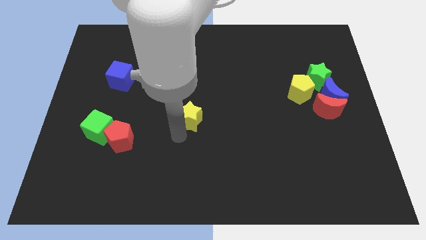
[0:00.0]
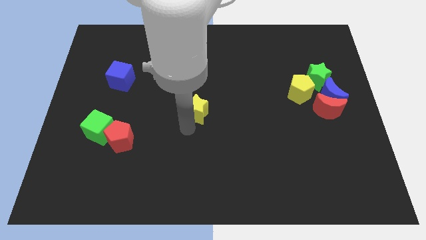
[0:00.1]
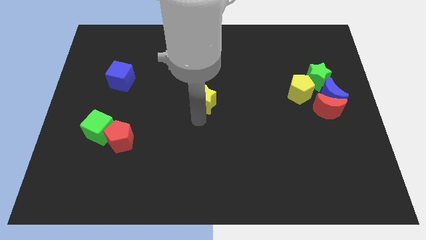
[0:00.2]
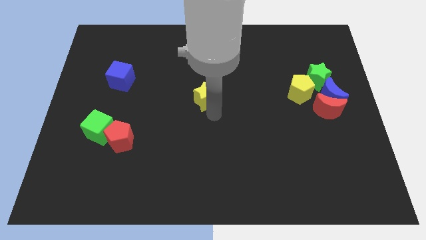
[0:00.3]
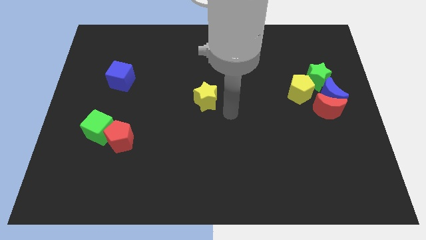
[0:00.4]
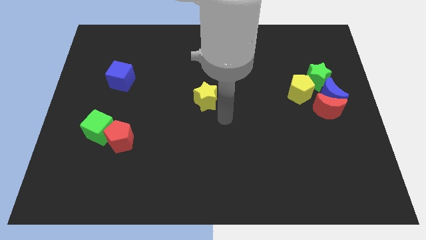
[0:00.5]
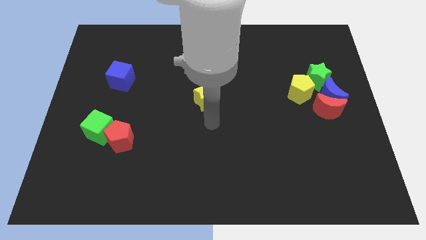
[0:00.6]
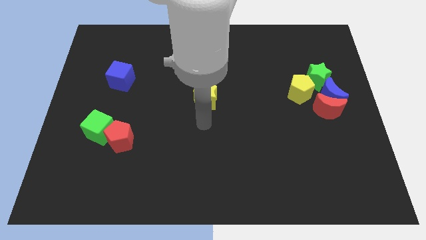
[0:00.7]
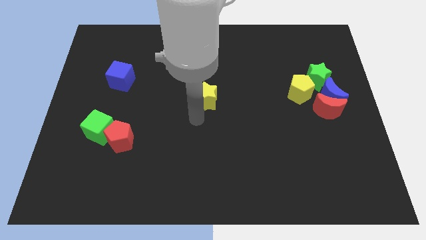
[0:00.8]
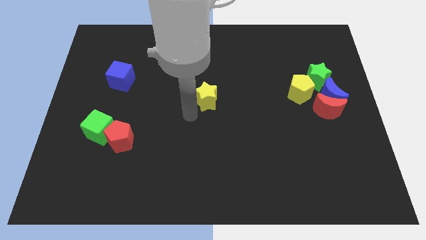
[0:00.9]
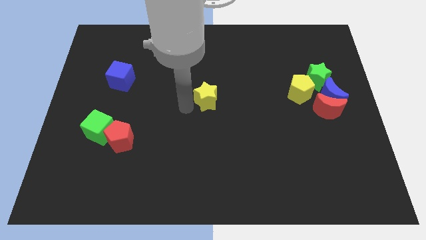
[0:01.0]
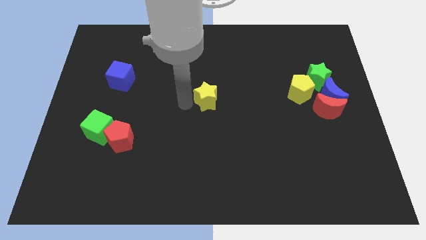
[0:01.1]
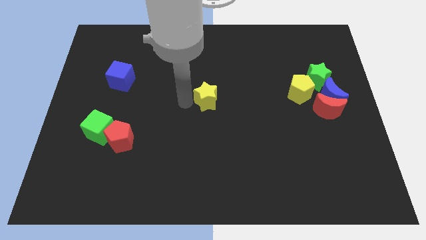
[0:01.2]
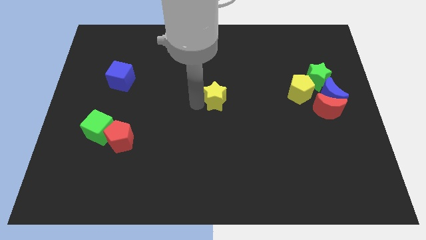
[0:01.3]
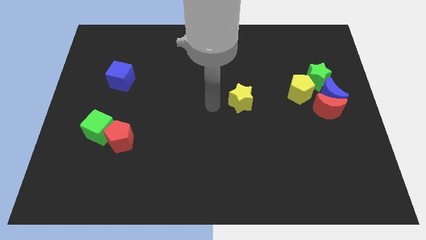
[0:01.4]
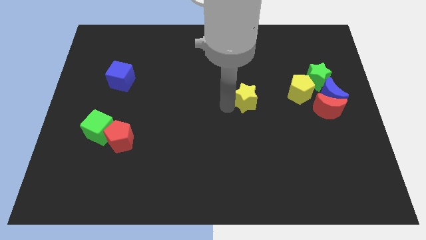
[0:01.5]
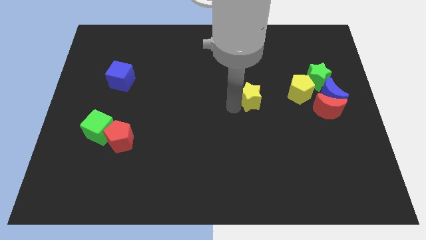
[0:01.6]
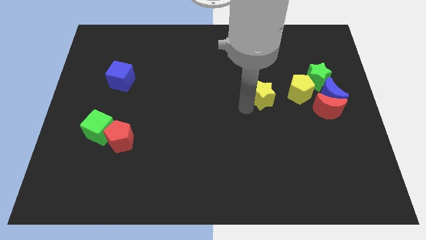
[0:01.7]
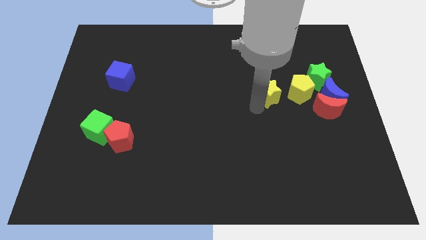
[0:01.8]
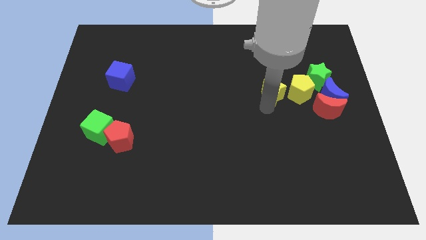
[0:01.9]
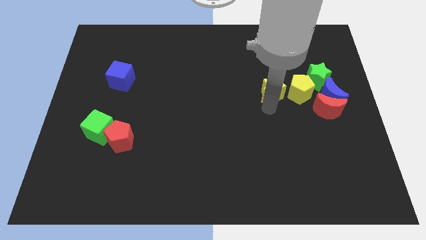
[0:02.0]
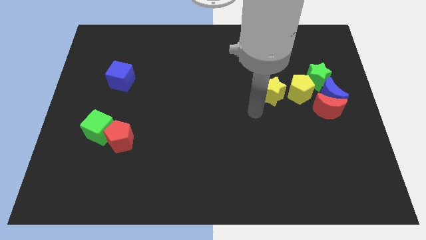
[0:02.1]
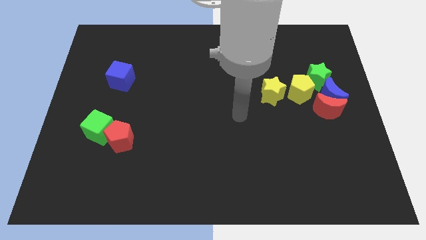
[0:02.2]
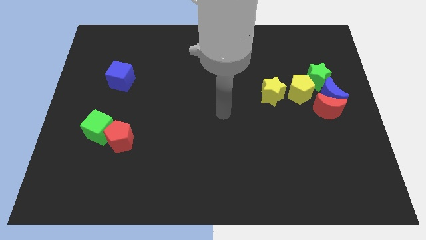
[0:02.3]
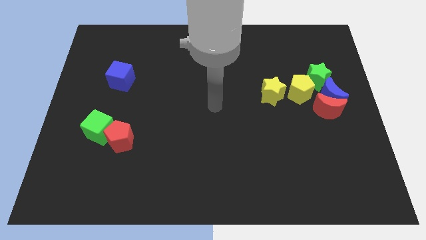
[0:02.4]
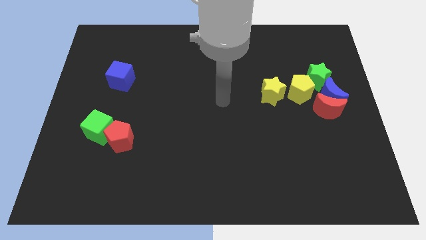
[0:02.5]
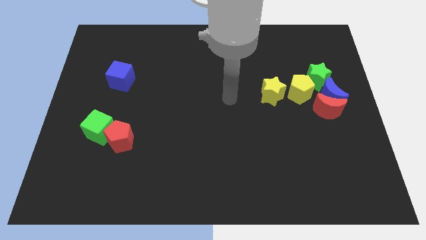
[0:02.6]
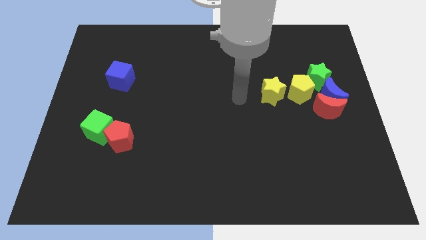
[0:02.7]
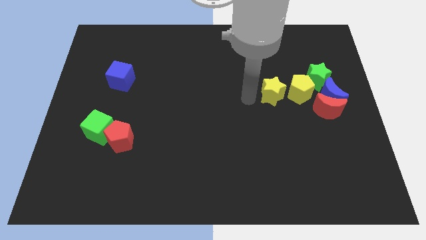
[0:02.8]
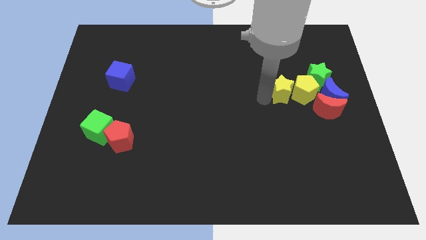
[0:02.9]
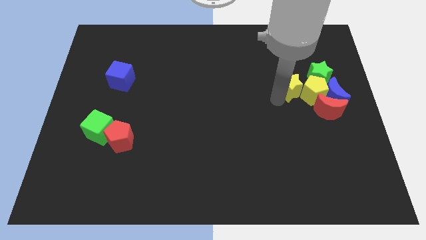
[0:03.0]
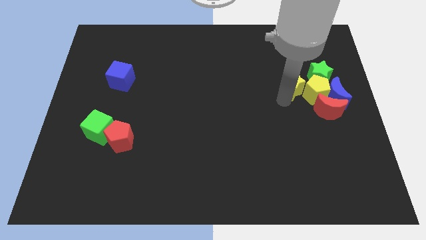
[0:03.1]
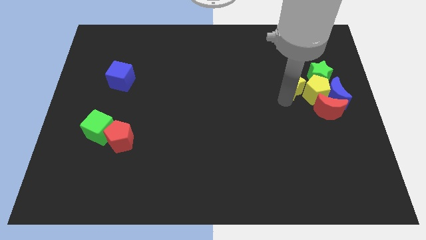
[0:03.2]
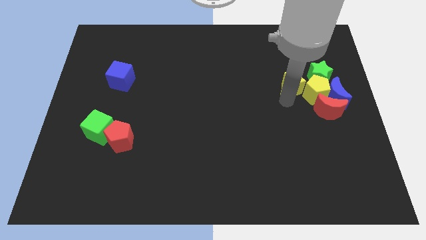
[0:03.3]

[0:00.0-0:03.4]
move the yellow star into the group of blocks

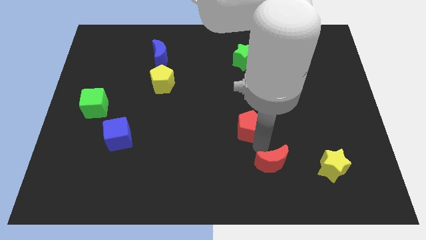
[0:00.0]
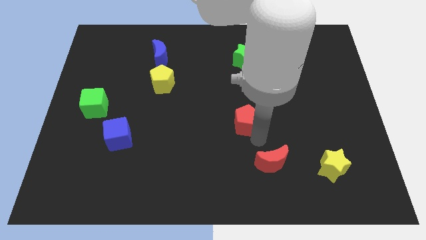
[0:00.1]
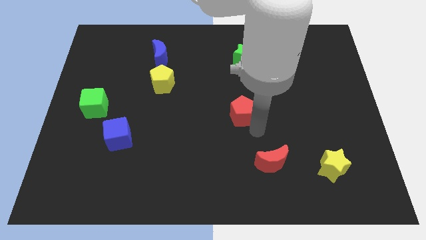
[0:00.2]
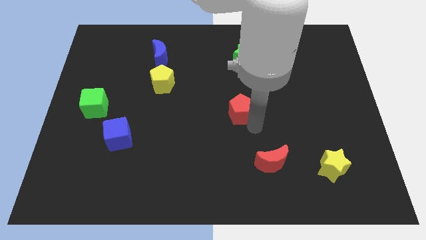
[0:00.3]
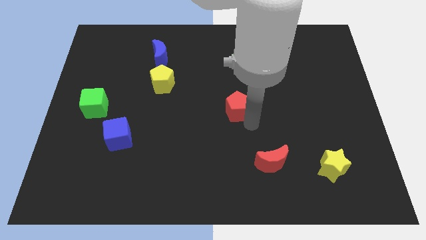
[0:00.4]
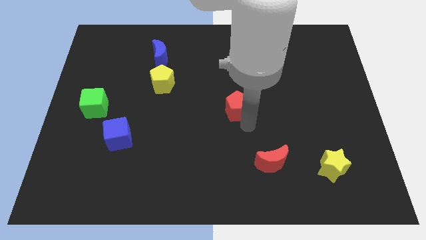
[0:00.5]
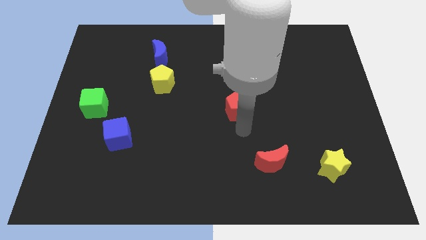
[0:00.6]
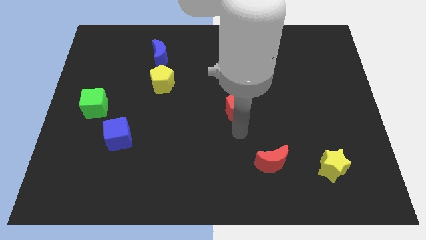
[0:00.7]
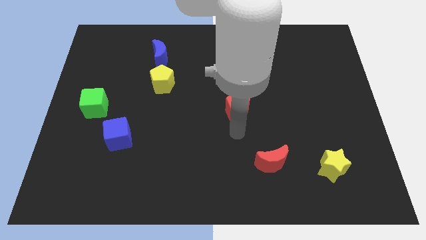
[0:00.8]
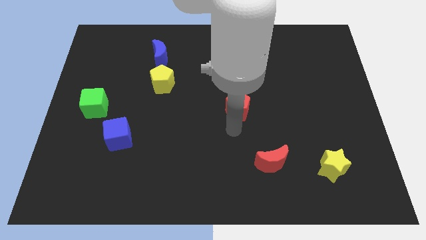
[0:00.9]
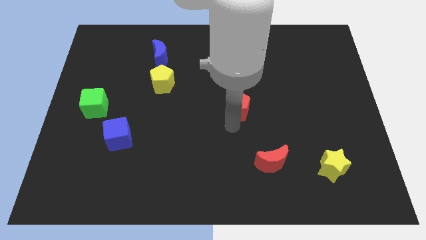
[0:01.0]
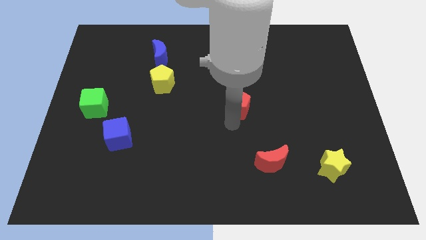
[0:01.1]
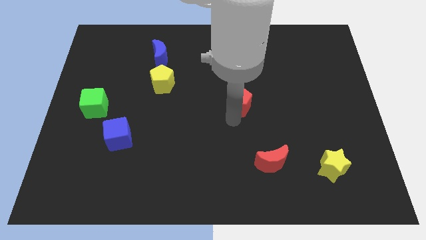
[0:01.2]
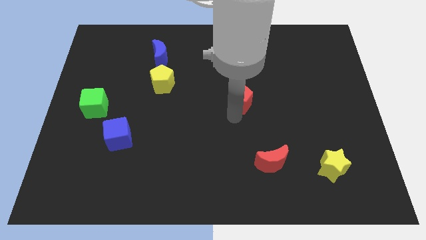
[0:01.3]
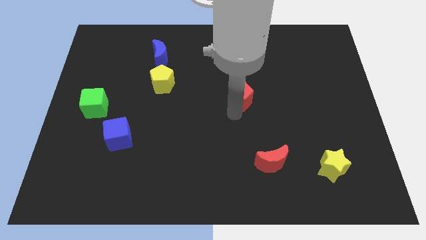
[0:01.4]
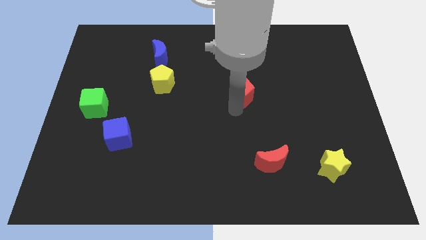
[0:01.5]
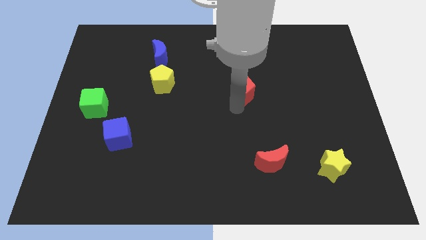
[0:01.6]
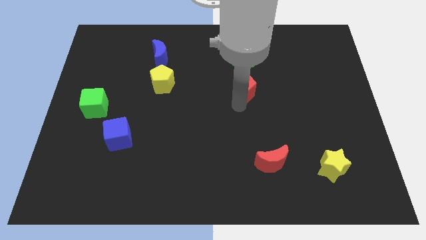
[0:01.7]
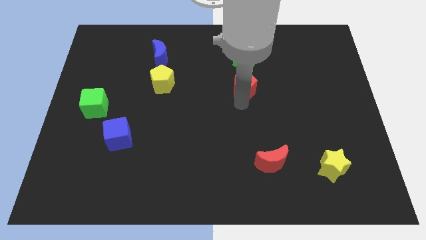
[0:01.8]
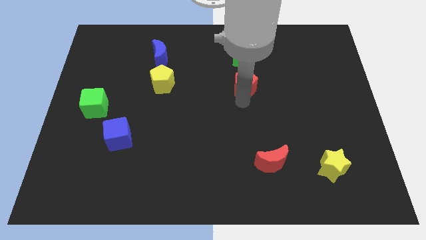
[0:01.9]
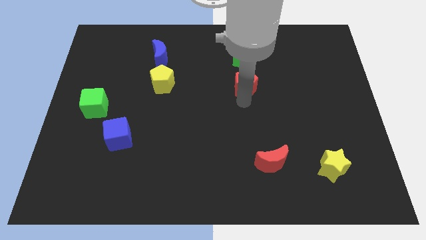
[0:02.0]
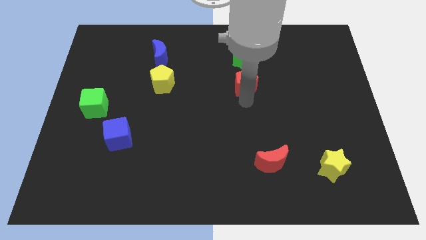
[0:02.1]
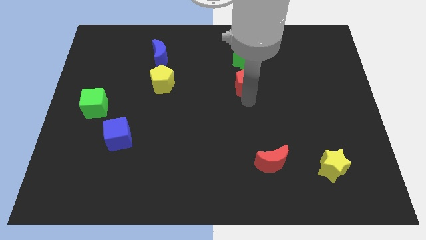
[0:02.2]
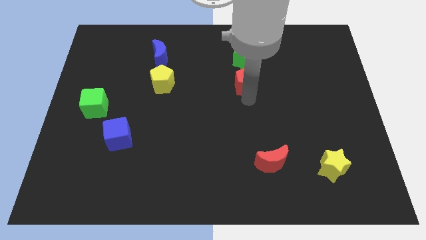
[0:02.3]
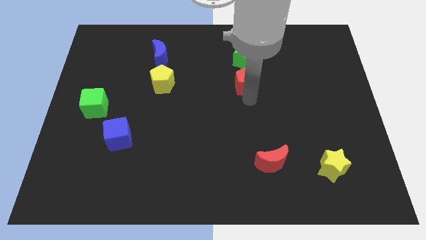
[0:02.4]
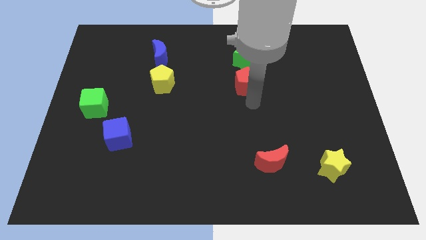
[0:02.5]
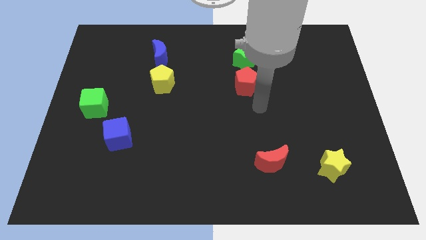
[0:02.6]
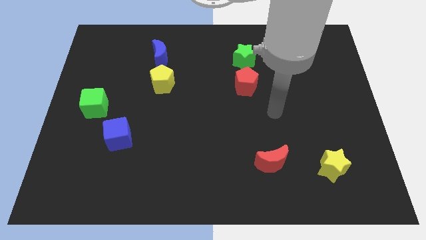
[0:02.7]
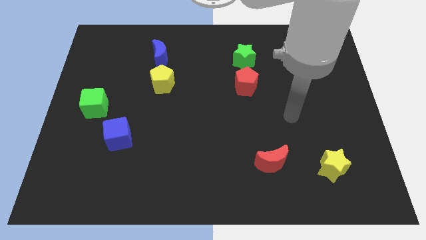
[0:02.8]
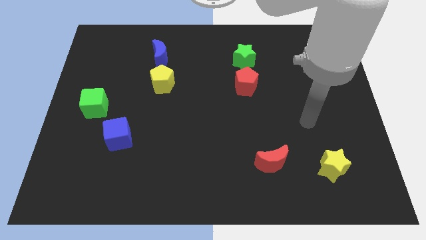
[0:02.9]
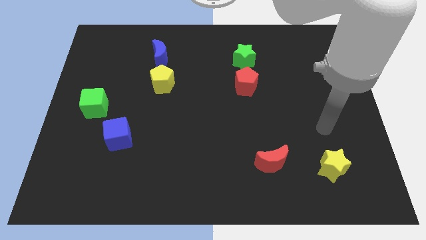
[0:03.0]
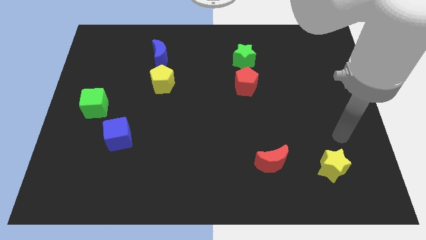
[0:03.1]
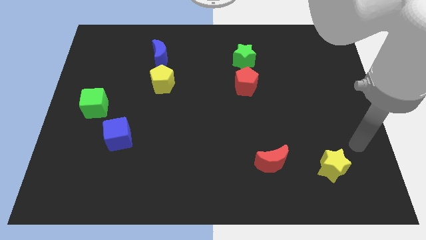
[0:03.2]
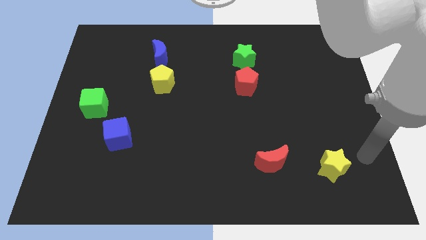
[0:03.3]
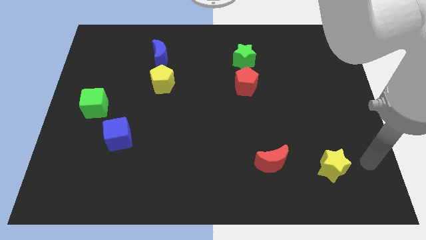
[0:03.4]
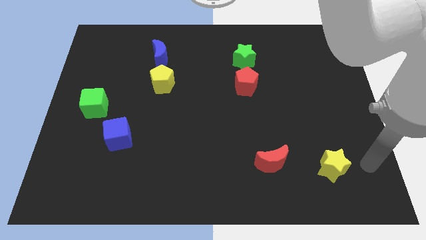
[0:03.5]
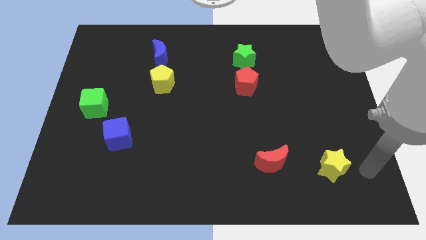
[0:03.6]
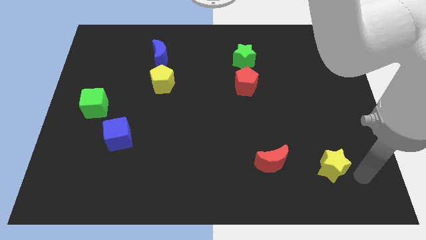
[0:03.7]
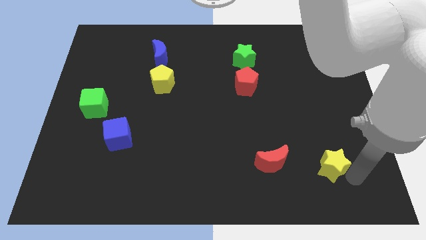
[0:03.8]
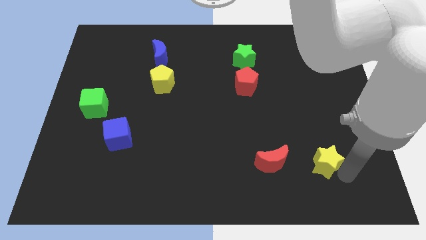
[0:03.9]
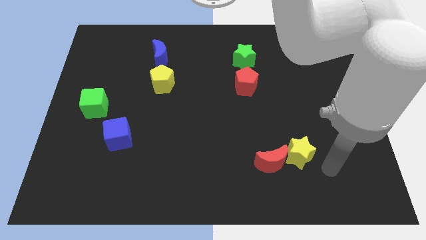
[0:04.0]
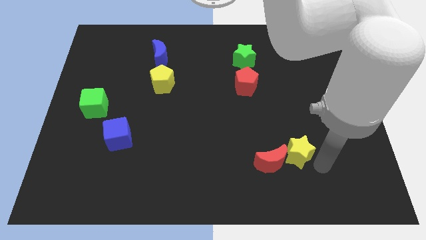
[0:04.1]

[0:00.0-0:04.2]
move yellow star close to red moon

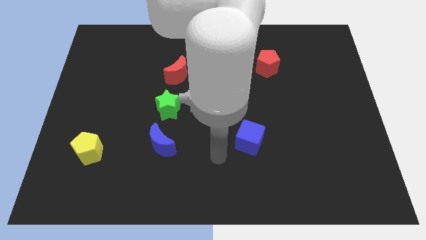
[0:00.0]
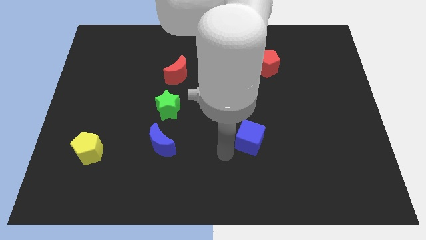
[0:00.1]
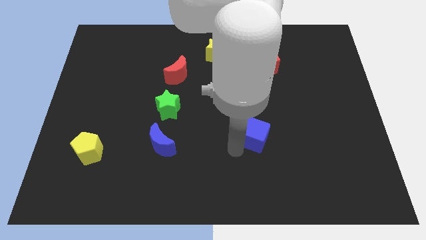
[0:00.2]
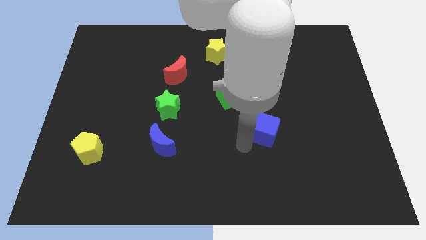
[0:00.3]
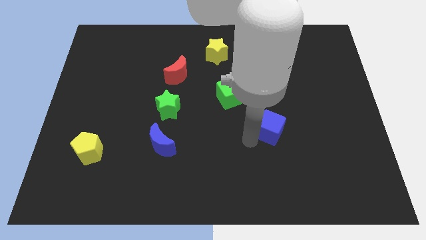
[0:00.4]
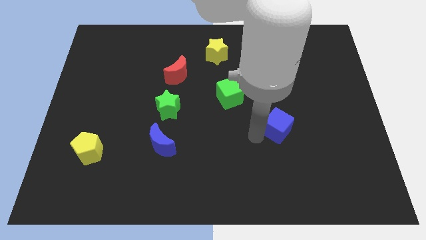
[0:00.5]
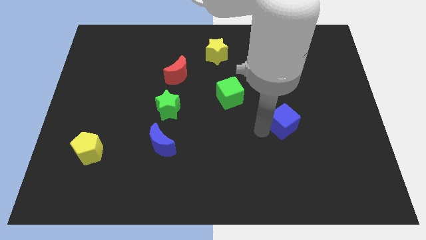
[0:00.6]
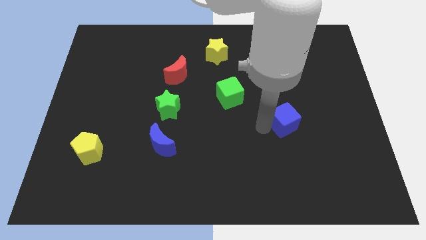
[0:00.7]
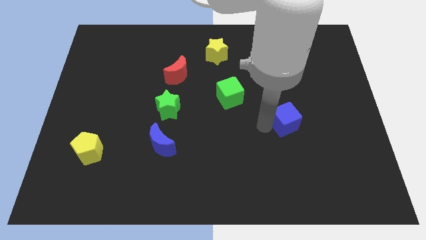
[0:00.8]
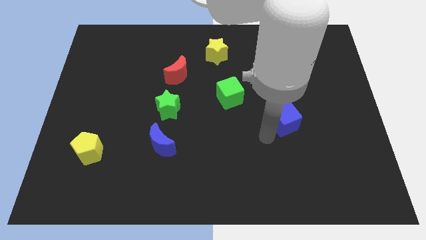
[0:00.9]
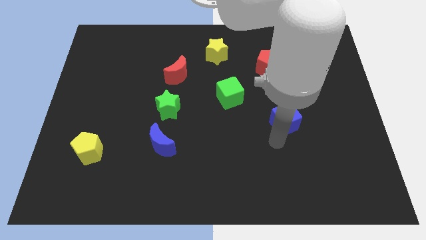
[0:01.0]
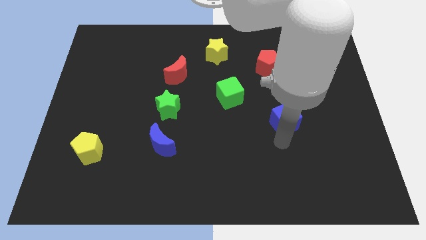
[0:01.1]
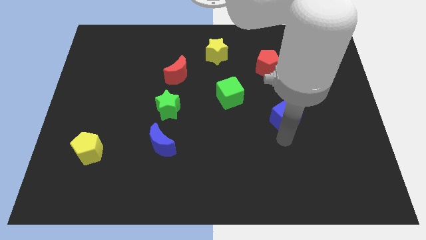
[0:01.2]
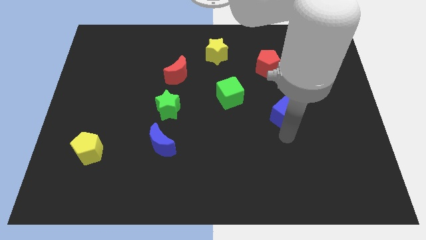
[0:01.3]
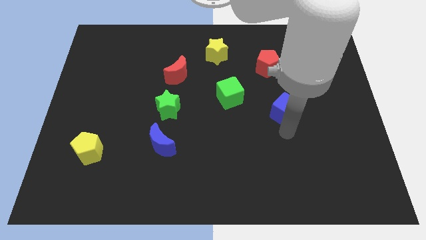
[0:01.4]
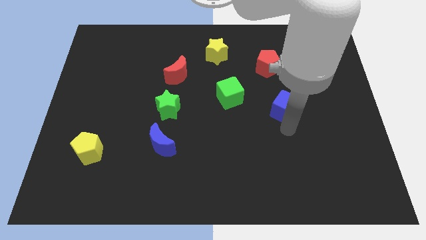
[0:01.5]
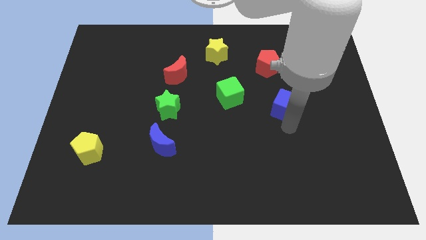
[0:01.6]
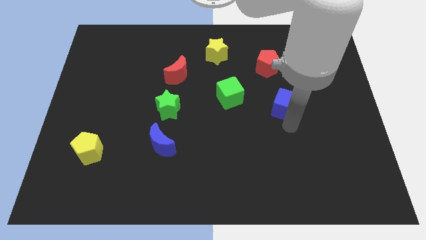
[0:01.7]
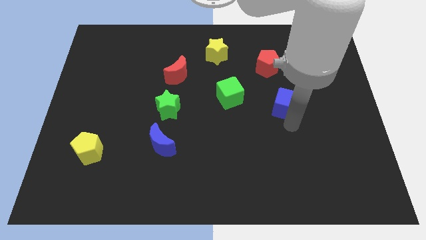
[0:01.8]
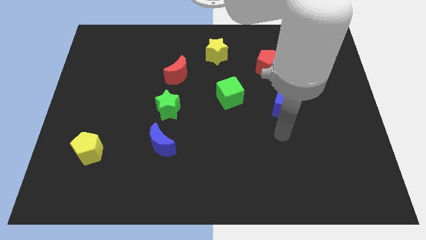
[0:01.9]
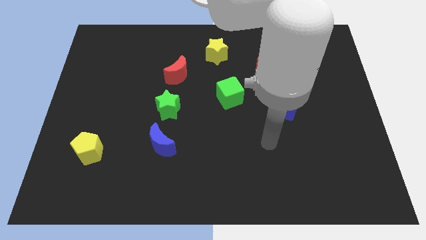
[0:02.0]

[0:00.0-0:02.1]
place blue cube below the red pentagon
